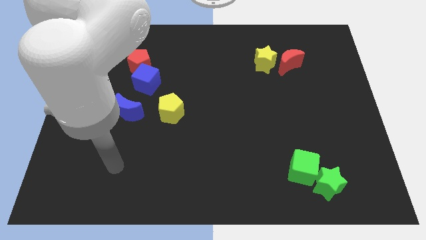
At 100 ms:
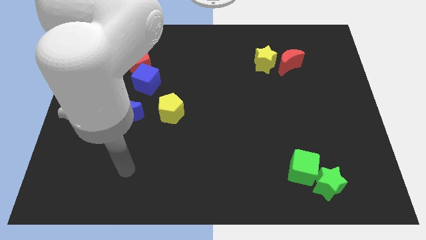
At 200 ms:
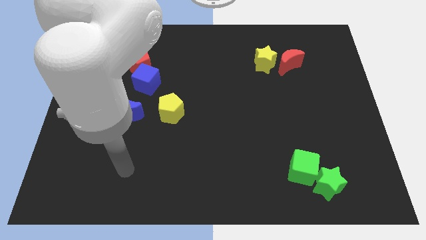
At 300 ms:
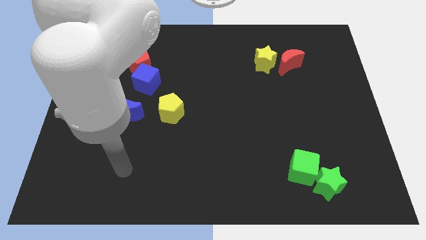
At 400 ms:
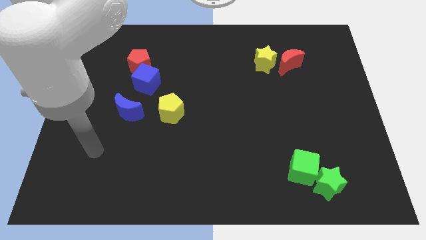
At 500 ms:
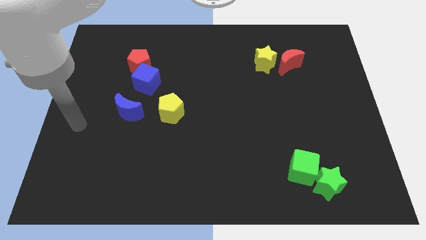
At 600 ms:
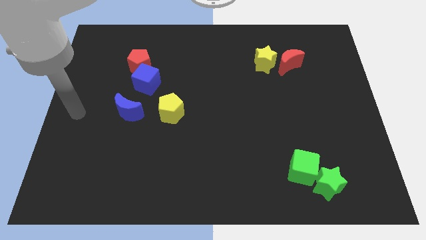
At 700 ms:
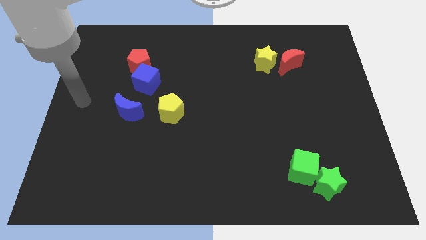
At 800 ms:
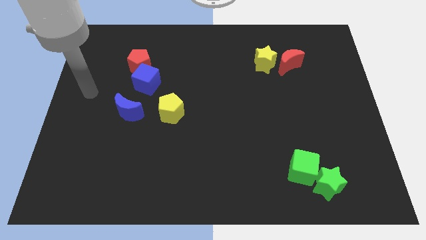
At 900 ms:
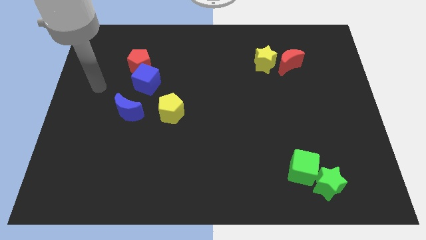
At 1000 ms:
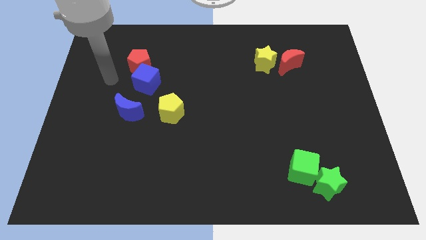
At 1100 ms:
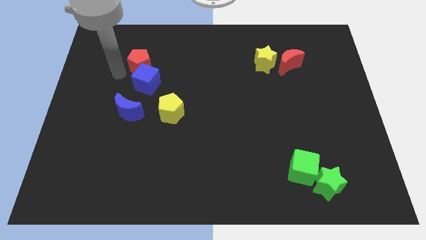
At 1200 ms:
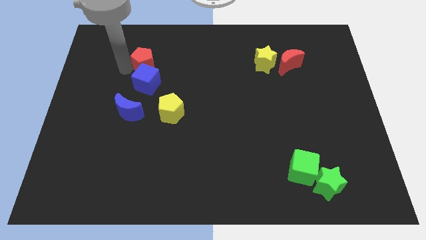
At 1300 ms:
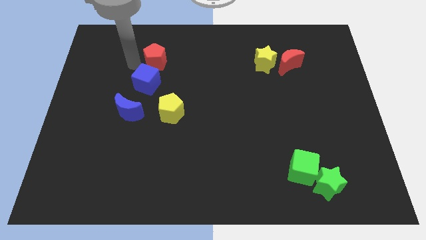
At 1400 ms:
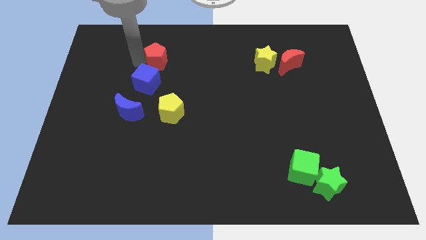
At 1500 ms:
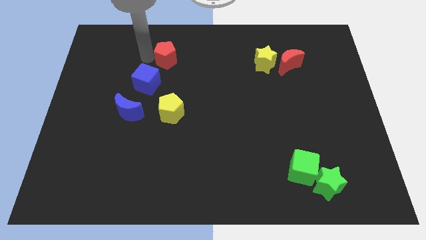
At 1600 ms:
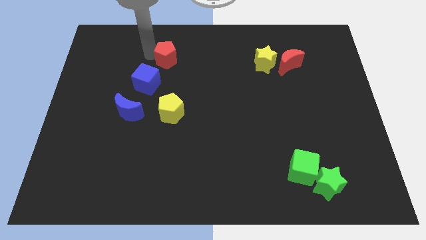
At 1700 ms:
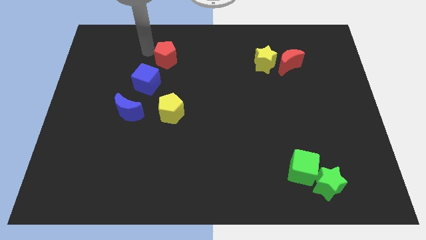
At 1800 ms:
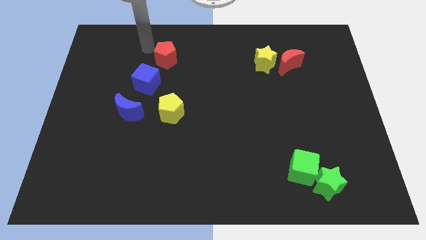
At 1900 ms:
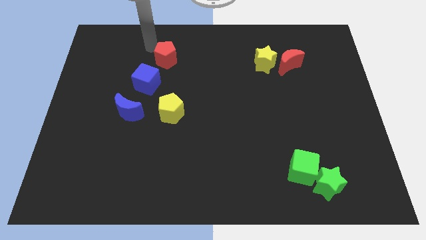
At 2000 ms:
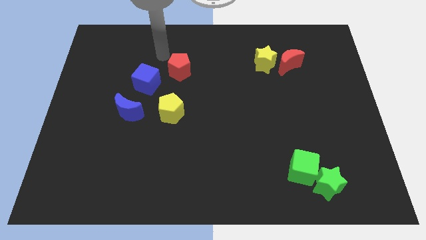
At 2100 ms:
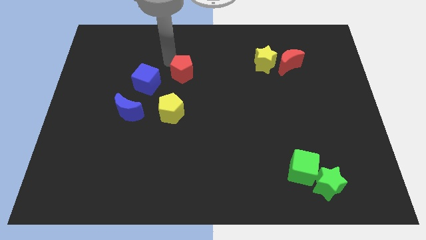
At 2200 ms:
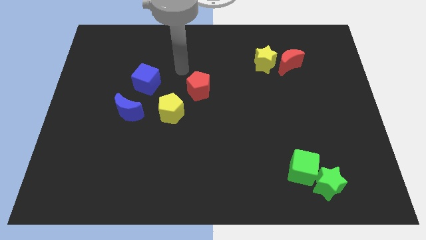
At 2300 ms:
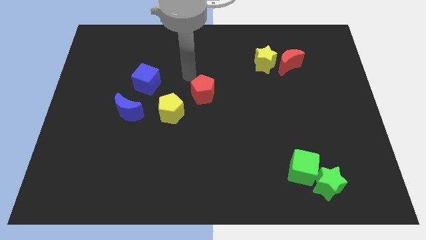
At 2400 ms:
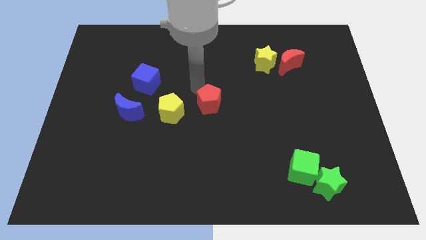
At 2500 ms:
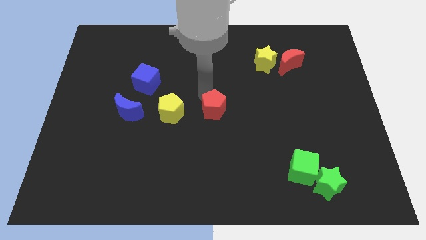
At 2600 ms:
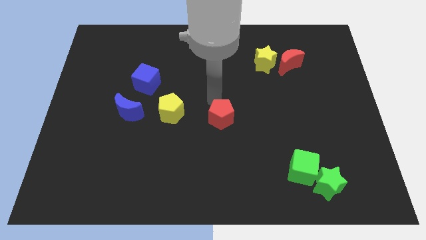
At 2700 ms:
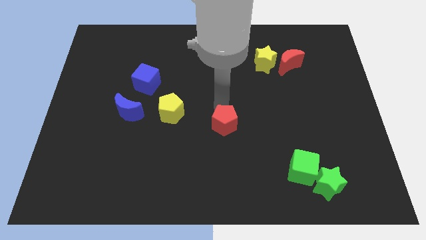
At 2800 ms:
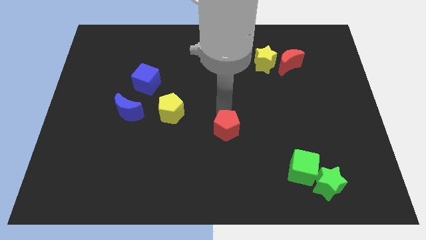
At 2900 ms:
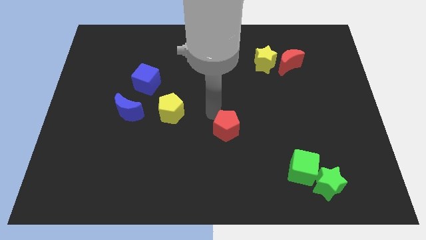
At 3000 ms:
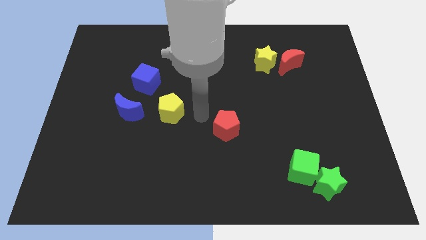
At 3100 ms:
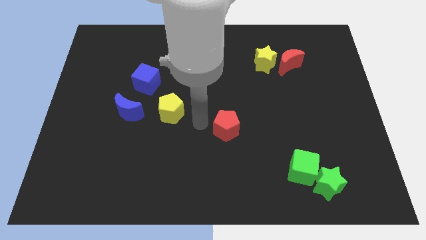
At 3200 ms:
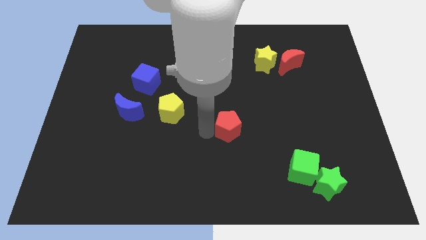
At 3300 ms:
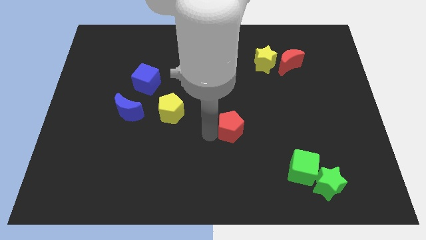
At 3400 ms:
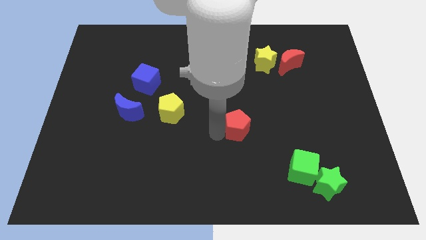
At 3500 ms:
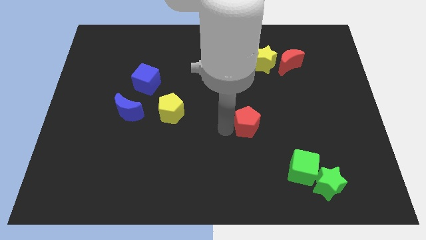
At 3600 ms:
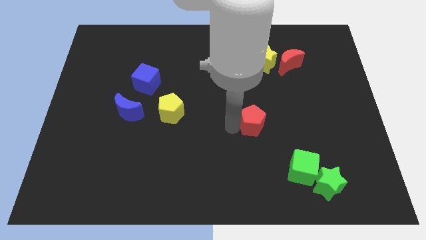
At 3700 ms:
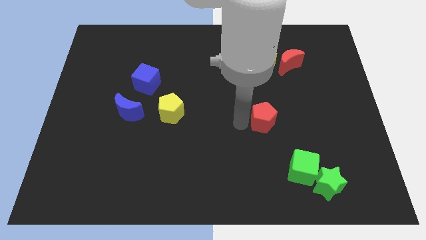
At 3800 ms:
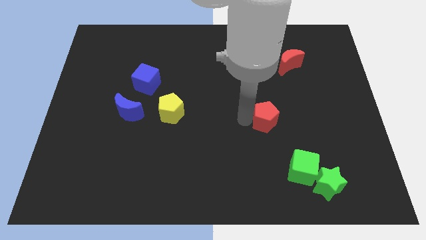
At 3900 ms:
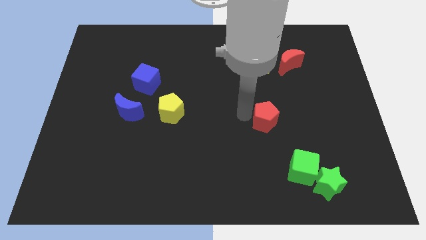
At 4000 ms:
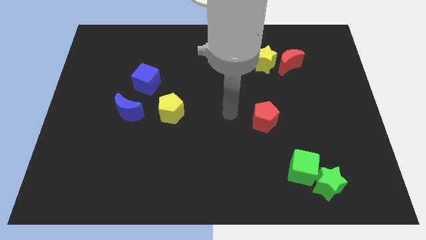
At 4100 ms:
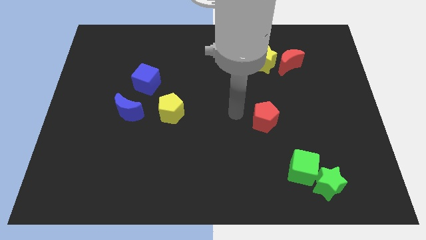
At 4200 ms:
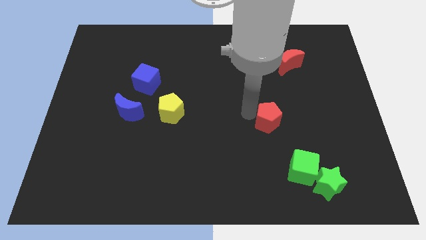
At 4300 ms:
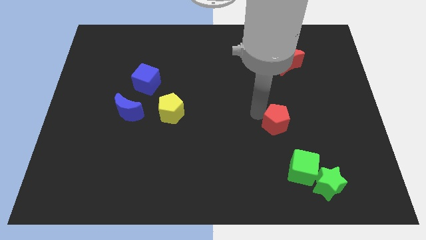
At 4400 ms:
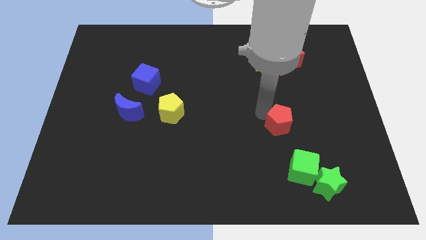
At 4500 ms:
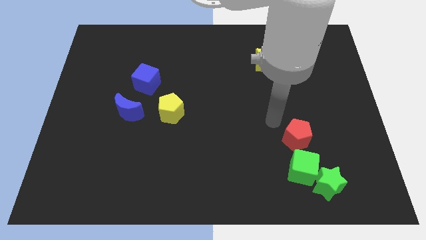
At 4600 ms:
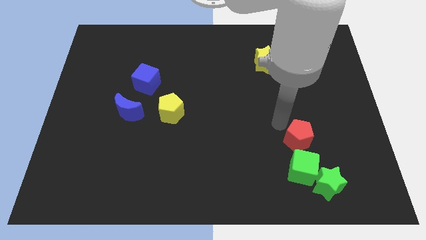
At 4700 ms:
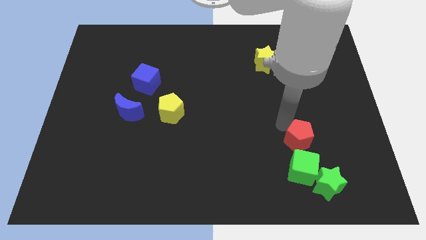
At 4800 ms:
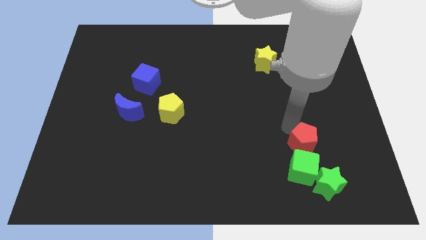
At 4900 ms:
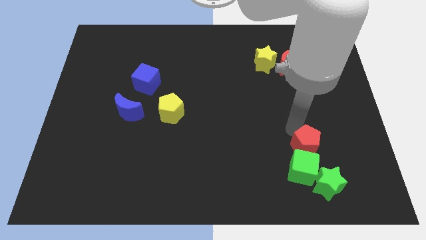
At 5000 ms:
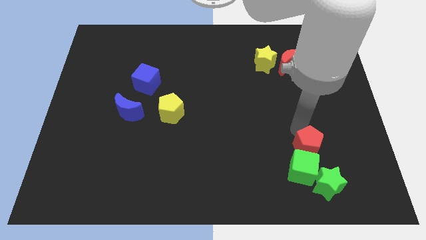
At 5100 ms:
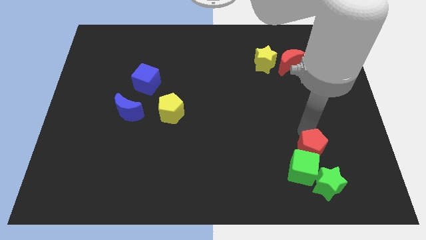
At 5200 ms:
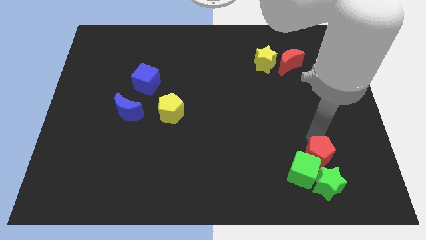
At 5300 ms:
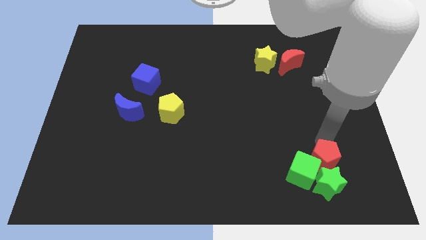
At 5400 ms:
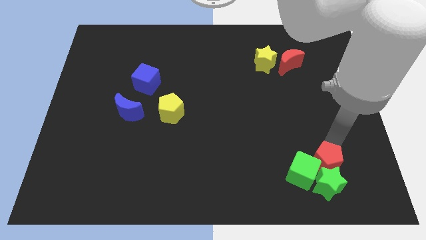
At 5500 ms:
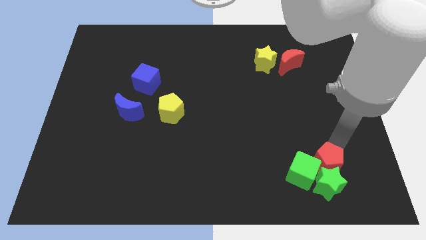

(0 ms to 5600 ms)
push the red pentagon to the green star

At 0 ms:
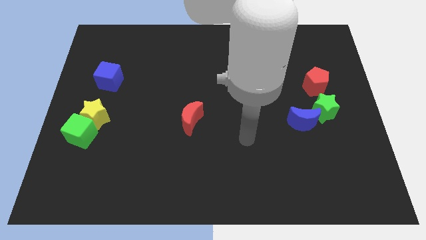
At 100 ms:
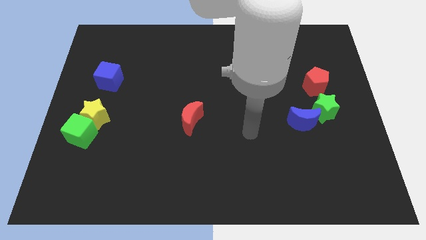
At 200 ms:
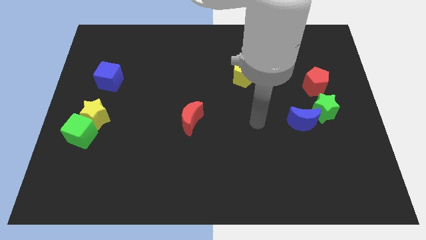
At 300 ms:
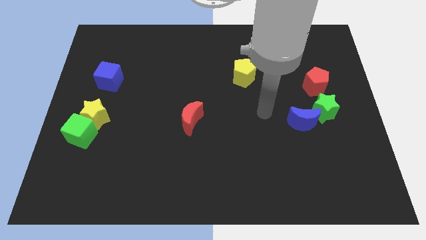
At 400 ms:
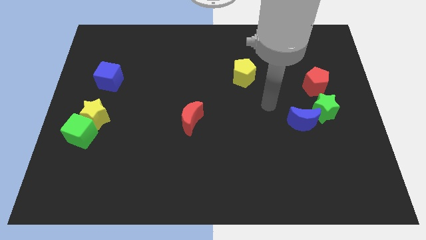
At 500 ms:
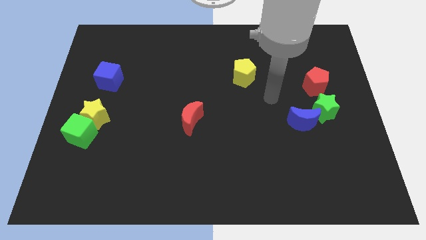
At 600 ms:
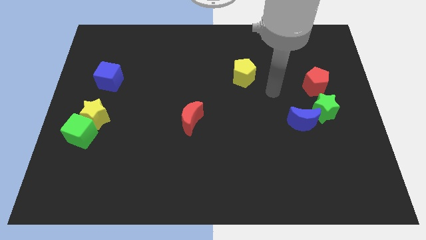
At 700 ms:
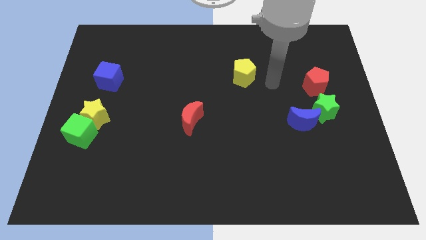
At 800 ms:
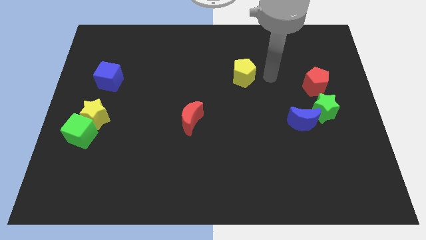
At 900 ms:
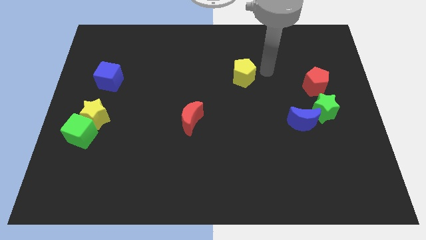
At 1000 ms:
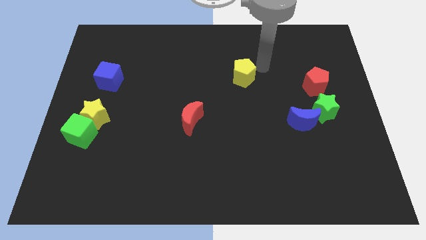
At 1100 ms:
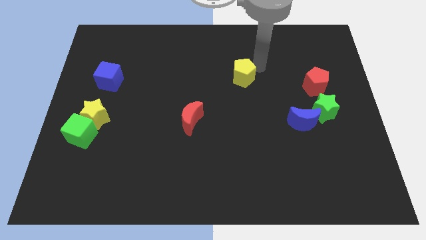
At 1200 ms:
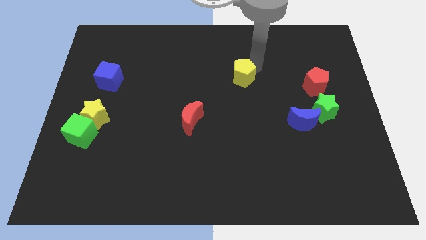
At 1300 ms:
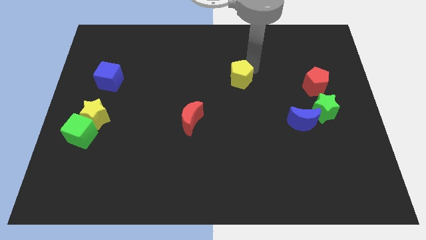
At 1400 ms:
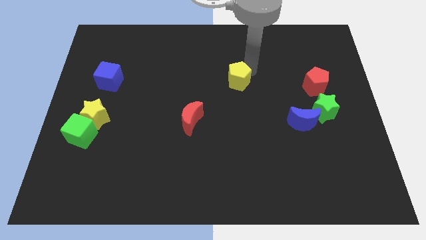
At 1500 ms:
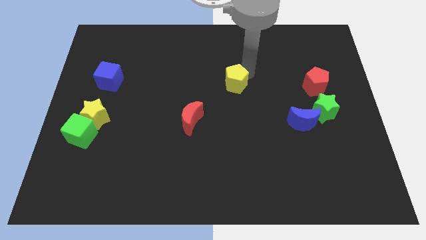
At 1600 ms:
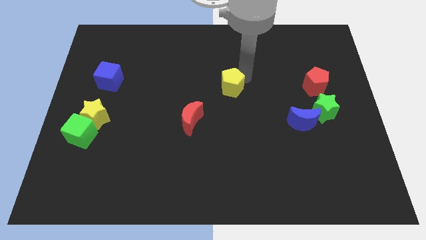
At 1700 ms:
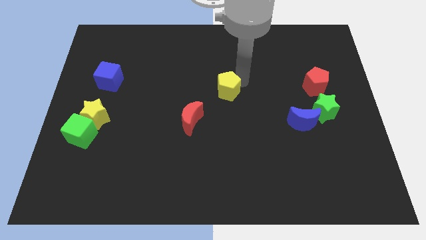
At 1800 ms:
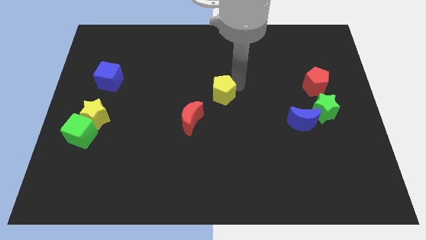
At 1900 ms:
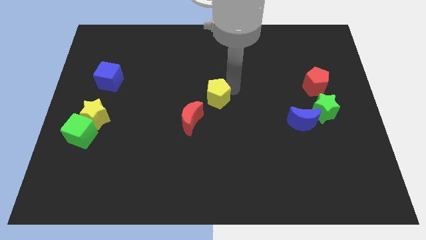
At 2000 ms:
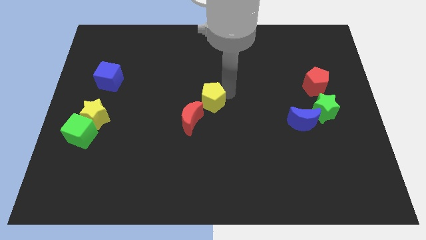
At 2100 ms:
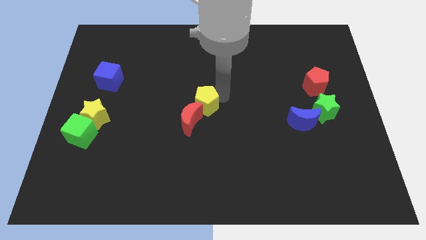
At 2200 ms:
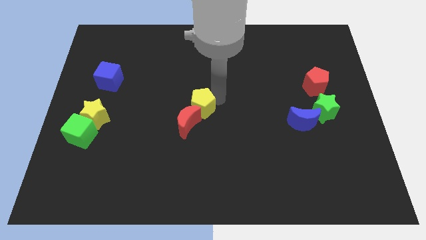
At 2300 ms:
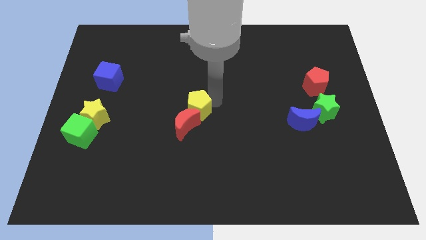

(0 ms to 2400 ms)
move the yellow pentagon towards the red moon

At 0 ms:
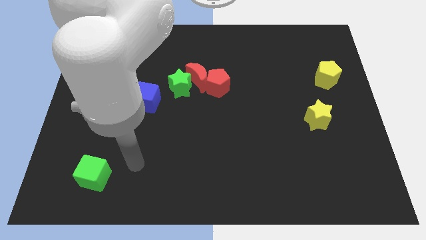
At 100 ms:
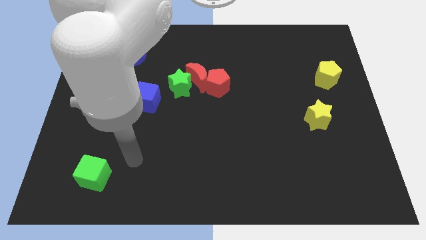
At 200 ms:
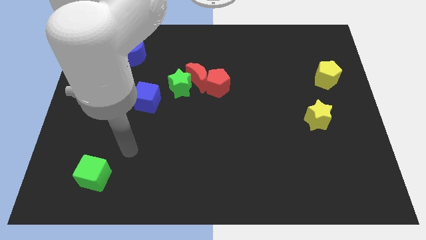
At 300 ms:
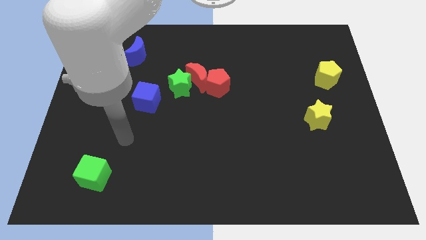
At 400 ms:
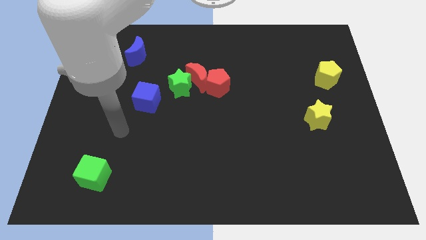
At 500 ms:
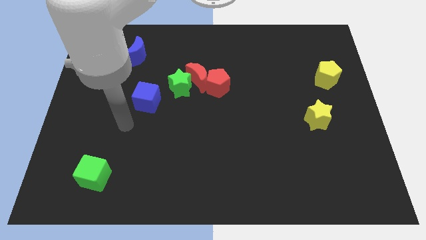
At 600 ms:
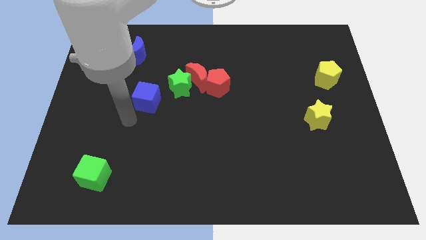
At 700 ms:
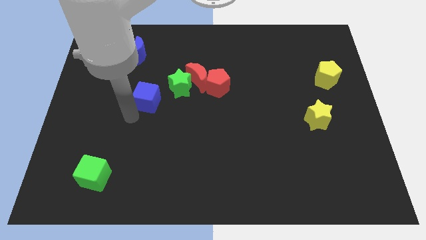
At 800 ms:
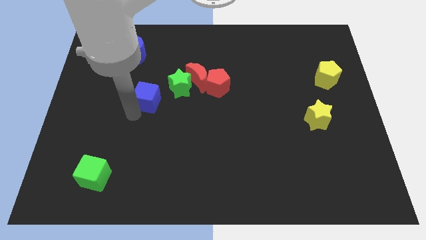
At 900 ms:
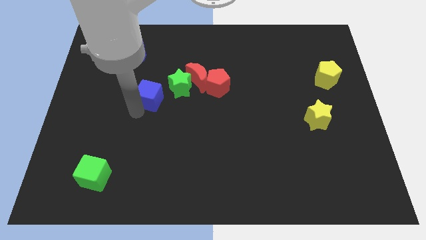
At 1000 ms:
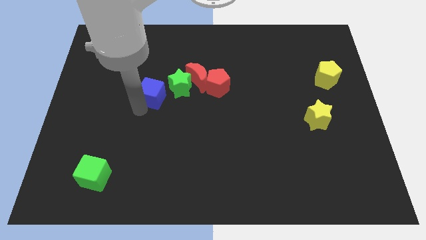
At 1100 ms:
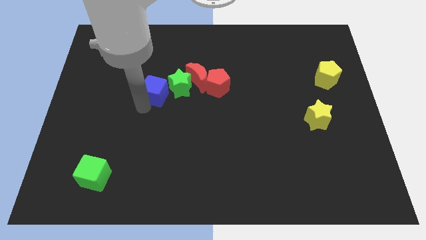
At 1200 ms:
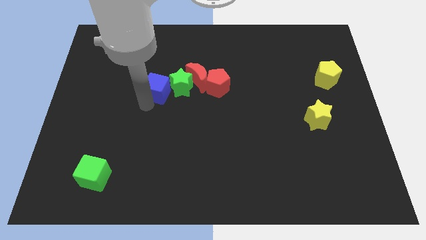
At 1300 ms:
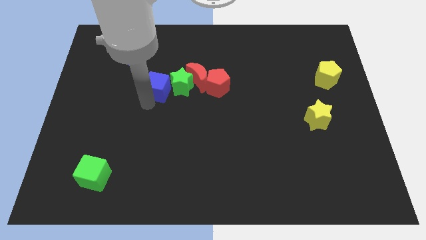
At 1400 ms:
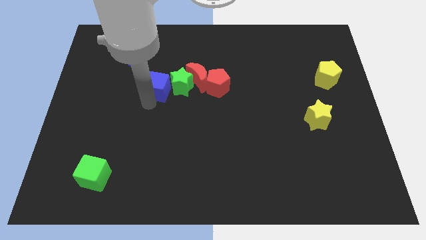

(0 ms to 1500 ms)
slide the blue cube towards the green star
